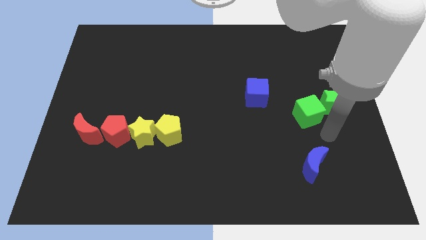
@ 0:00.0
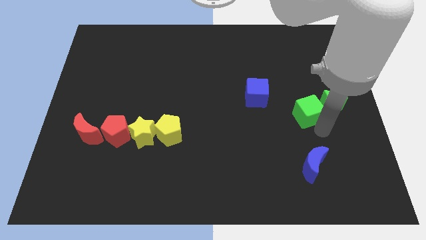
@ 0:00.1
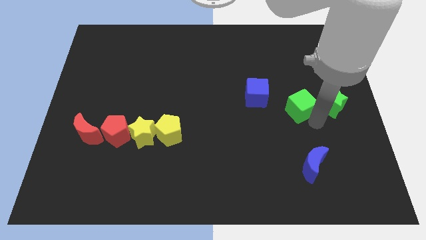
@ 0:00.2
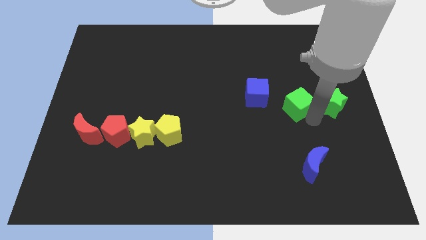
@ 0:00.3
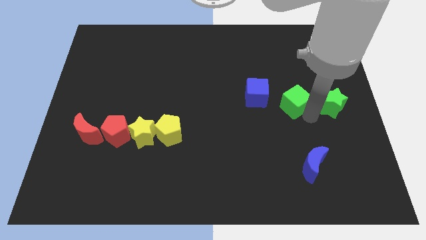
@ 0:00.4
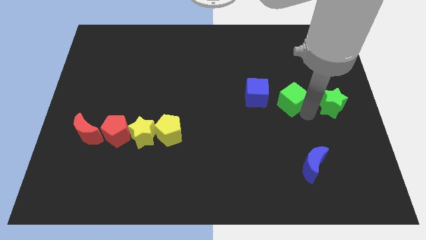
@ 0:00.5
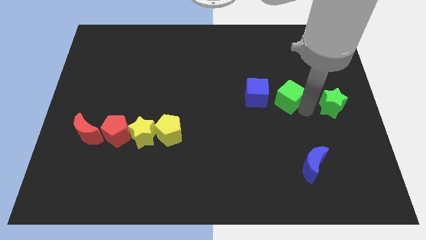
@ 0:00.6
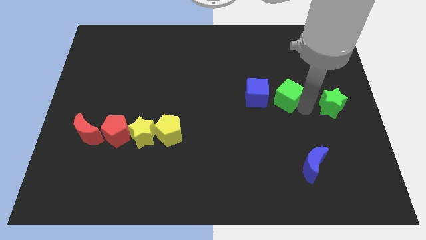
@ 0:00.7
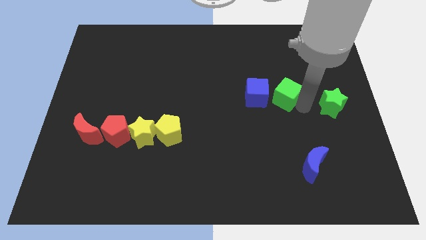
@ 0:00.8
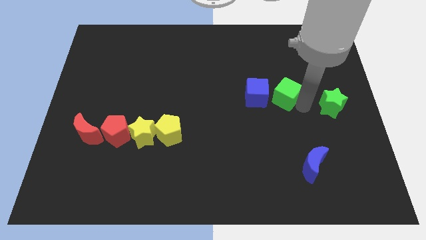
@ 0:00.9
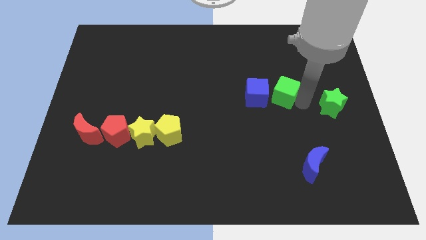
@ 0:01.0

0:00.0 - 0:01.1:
move green cube right to blue cube

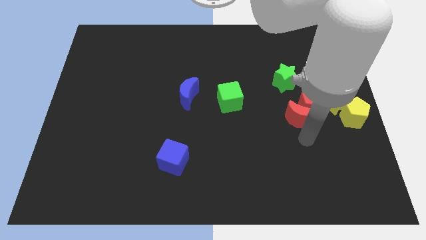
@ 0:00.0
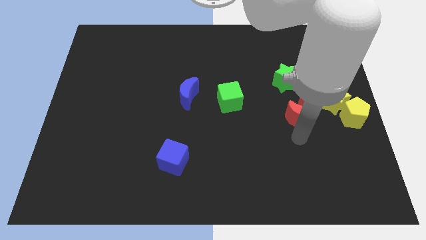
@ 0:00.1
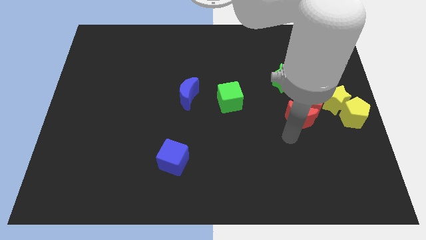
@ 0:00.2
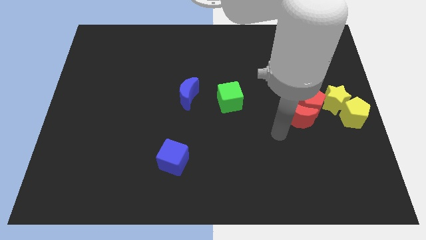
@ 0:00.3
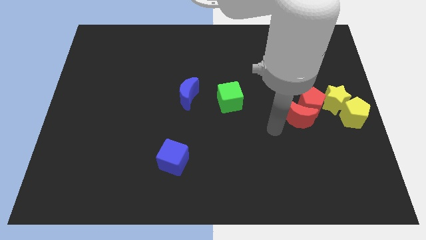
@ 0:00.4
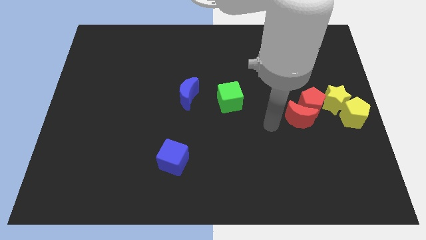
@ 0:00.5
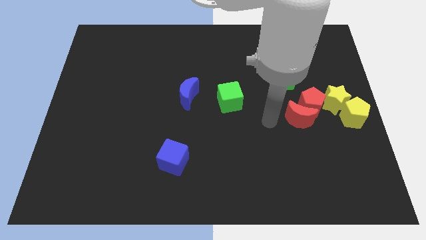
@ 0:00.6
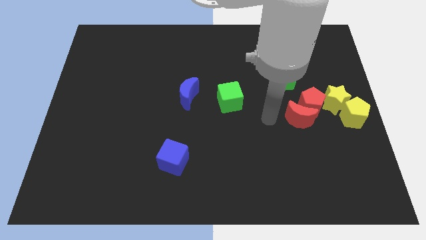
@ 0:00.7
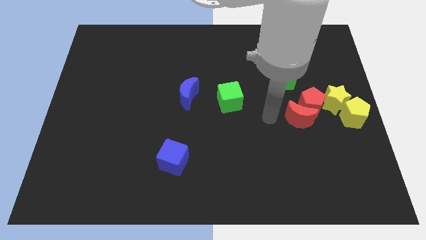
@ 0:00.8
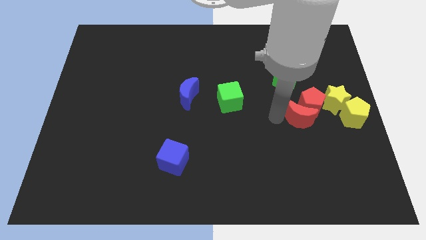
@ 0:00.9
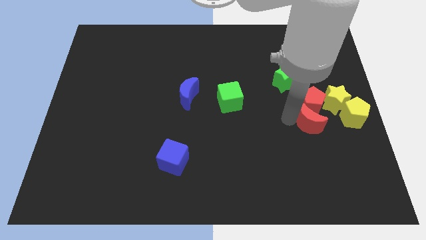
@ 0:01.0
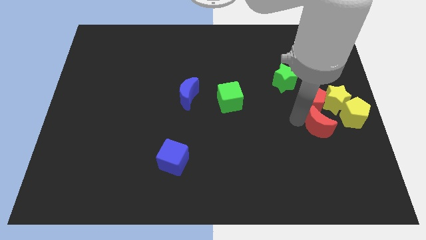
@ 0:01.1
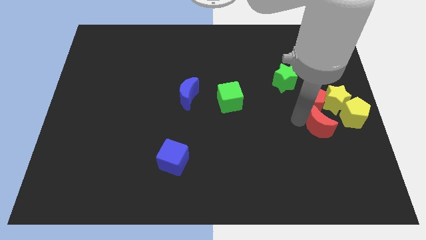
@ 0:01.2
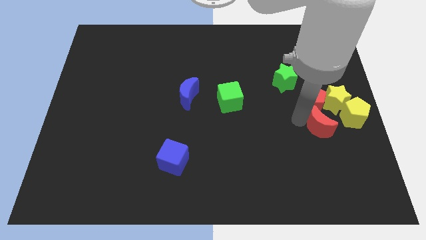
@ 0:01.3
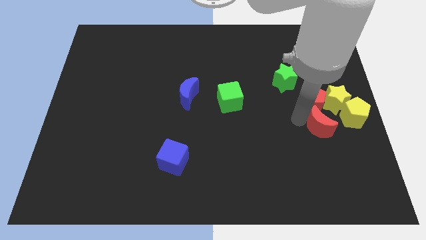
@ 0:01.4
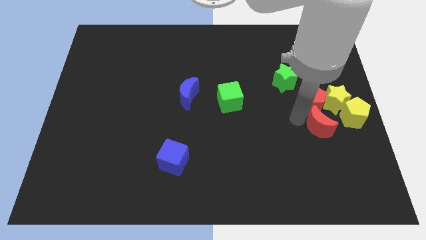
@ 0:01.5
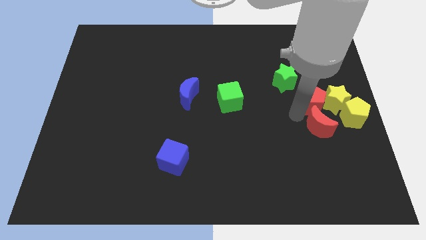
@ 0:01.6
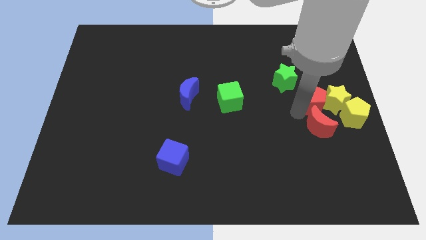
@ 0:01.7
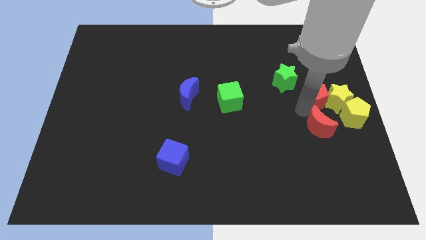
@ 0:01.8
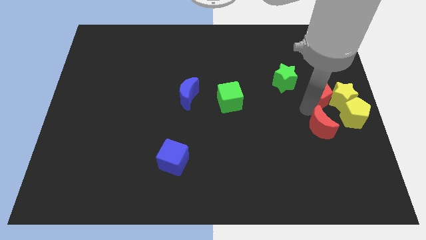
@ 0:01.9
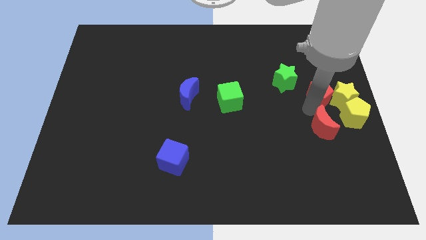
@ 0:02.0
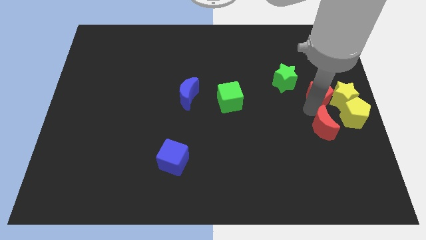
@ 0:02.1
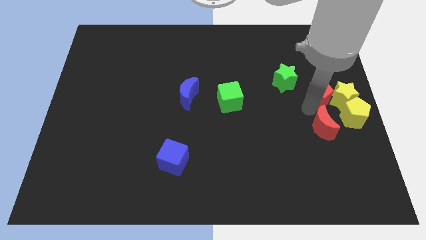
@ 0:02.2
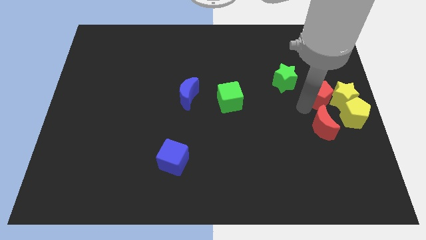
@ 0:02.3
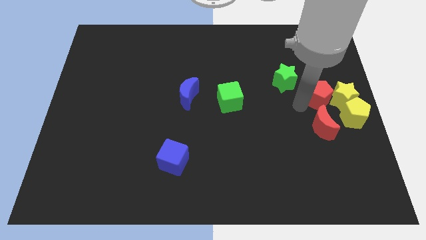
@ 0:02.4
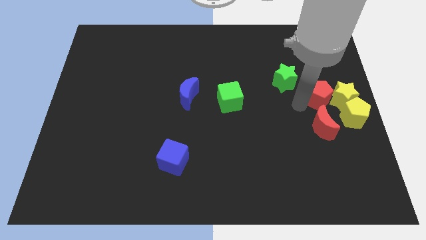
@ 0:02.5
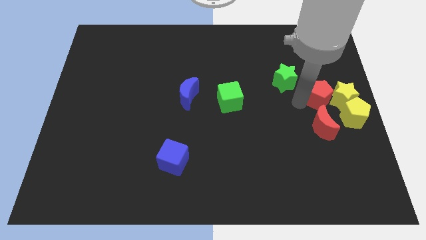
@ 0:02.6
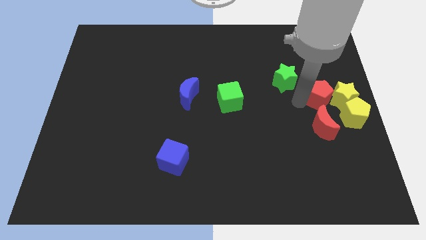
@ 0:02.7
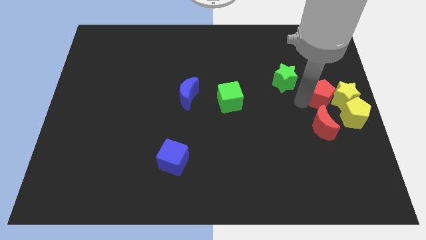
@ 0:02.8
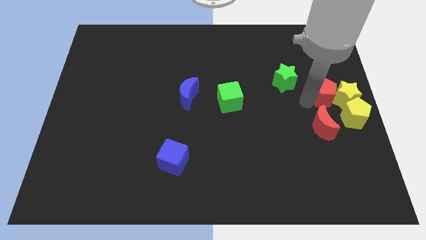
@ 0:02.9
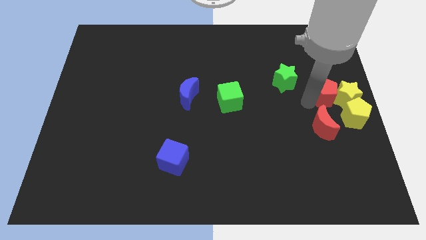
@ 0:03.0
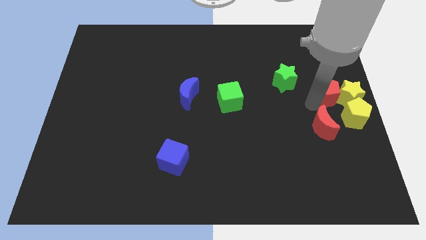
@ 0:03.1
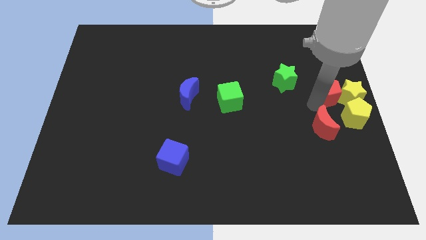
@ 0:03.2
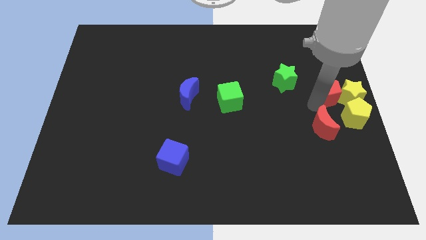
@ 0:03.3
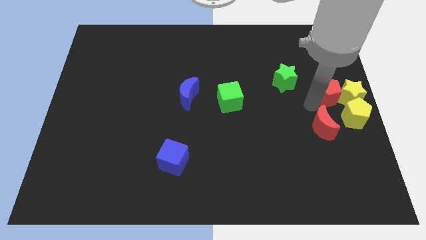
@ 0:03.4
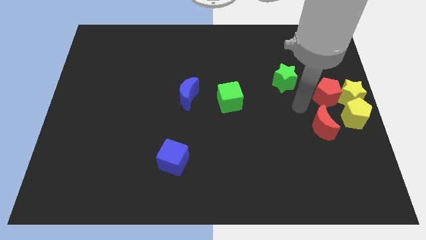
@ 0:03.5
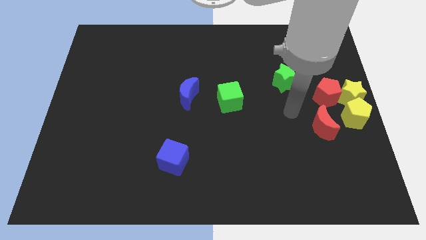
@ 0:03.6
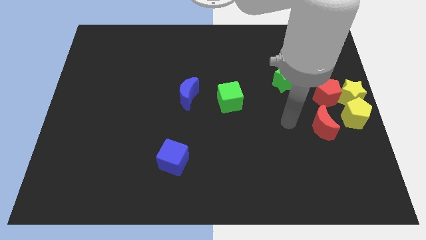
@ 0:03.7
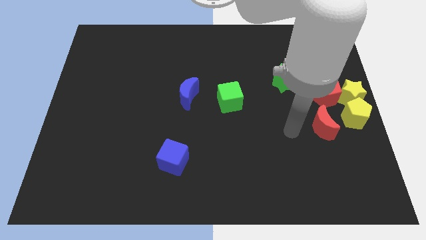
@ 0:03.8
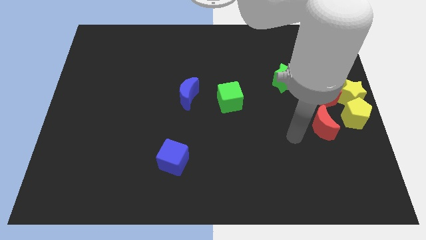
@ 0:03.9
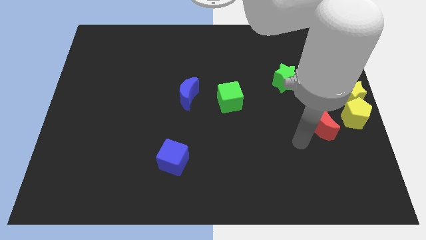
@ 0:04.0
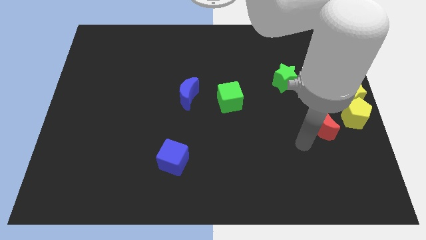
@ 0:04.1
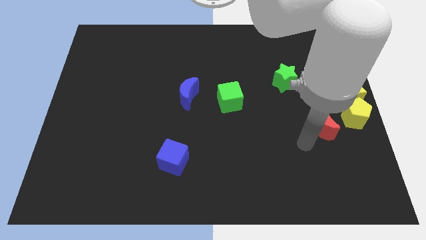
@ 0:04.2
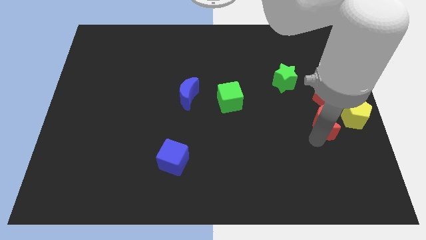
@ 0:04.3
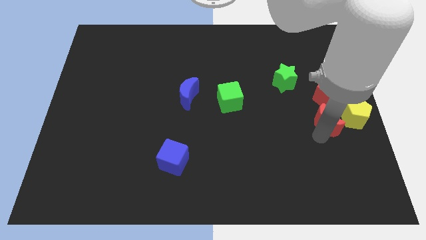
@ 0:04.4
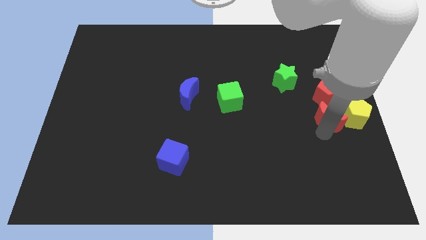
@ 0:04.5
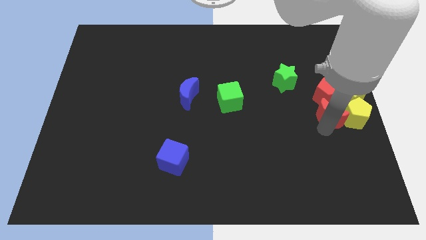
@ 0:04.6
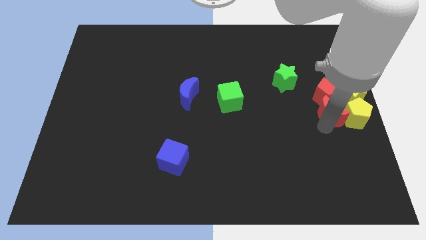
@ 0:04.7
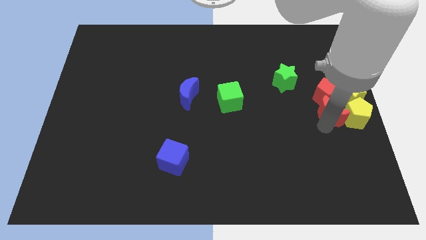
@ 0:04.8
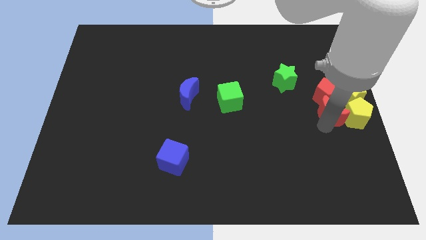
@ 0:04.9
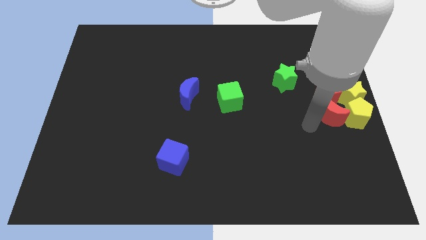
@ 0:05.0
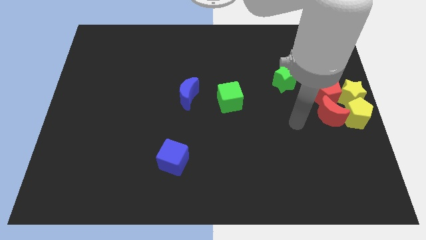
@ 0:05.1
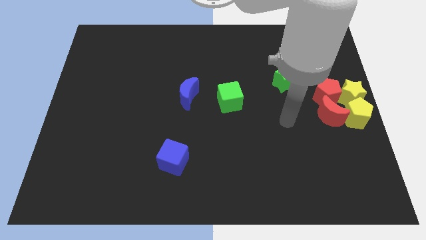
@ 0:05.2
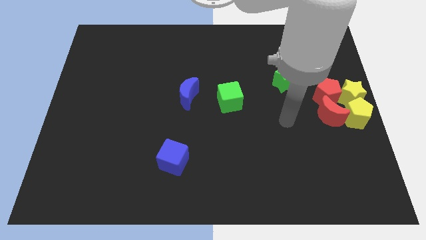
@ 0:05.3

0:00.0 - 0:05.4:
push the red moon into the group of red and yellow blocks

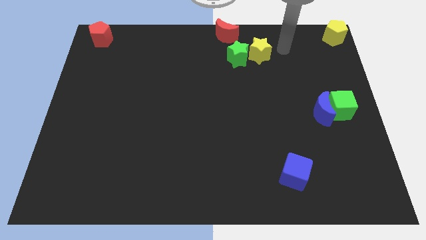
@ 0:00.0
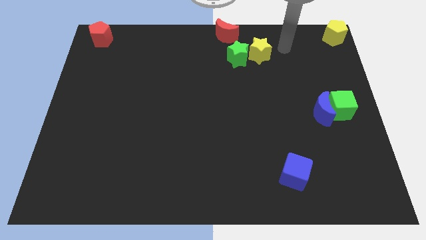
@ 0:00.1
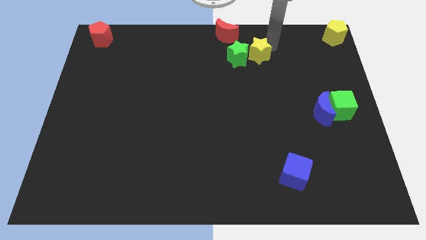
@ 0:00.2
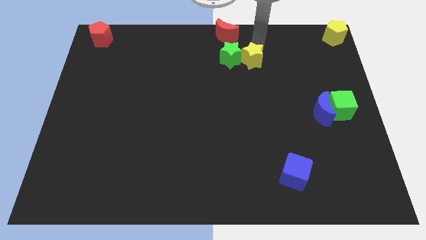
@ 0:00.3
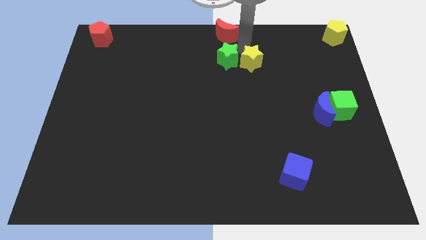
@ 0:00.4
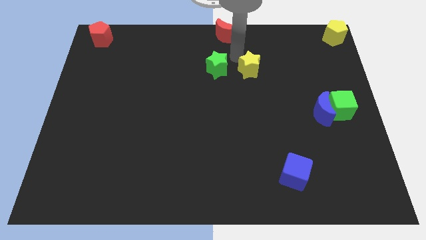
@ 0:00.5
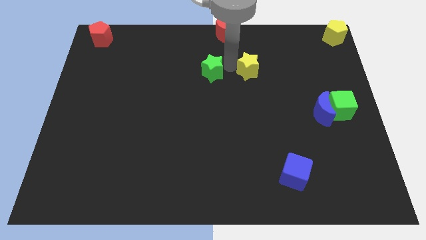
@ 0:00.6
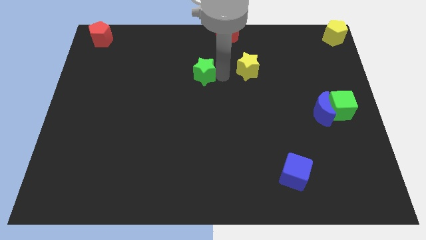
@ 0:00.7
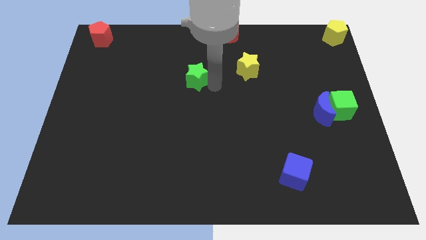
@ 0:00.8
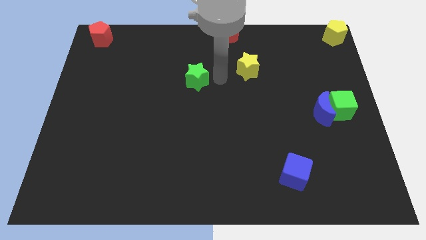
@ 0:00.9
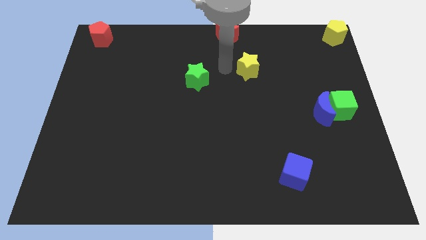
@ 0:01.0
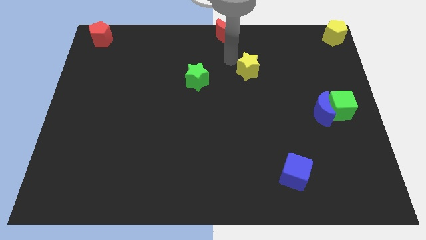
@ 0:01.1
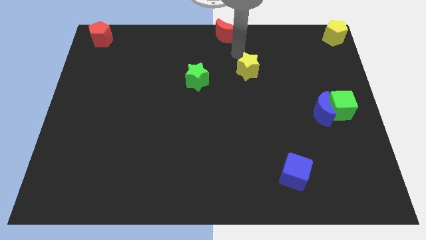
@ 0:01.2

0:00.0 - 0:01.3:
separate the green star and yellow star

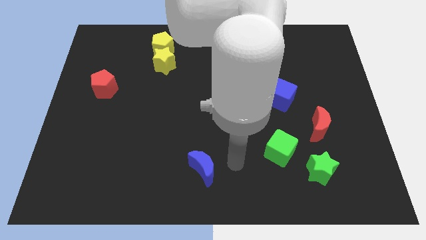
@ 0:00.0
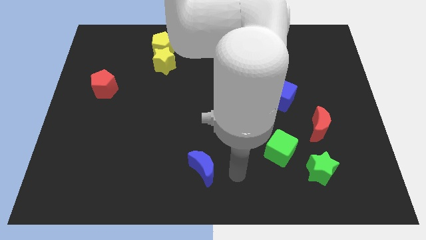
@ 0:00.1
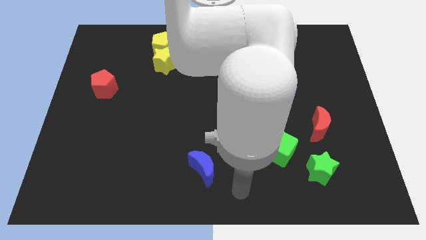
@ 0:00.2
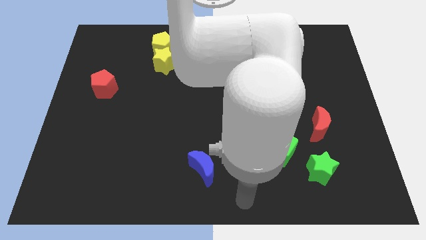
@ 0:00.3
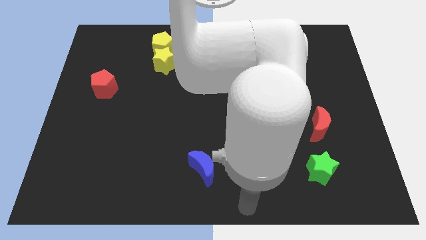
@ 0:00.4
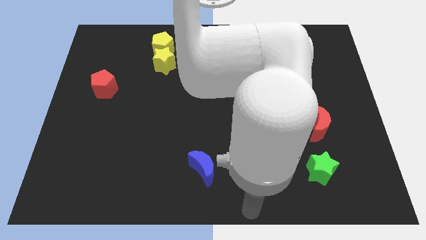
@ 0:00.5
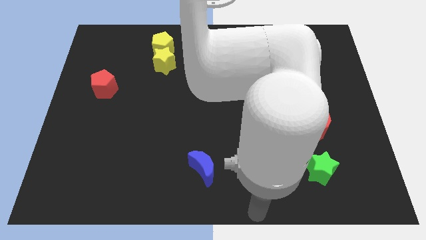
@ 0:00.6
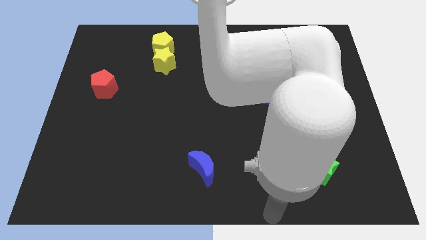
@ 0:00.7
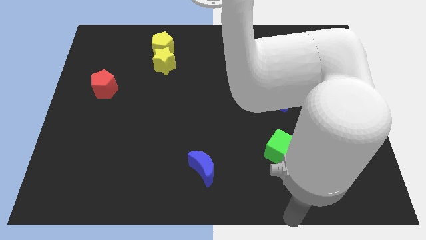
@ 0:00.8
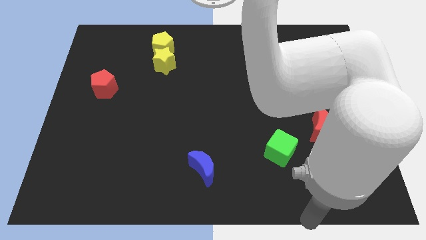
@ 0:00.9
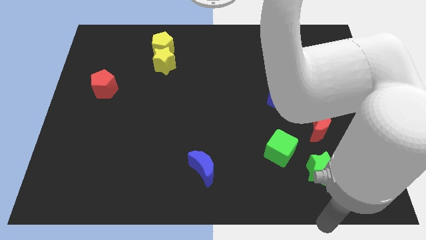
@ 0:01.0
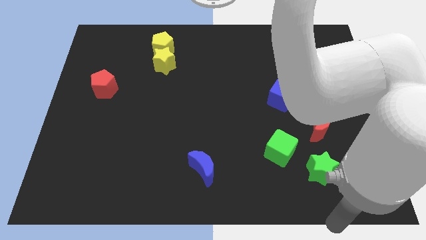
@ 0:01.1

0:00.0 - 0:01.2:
place the arm to the bottom of the green star
